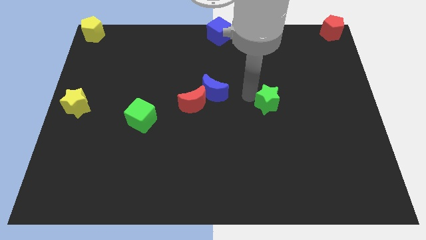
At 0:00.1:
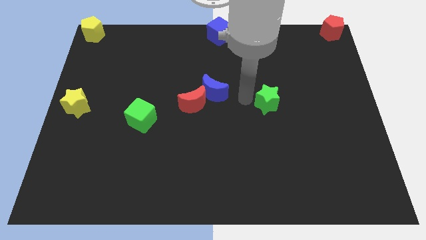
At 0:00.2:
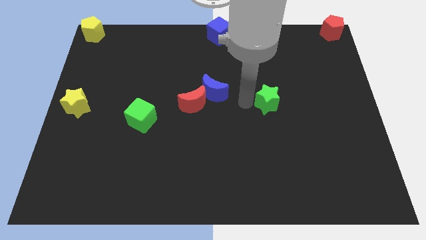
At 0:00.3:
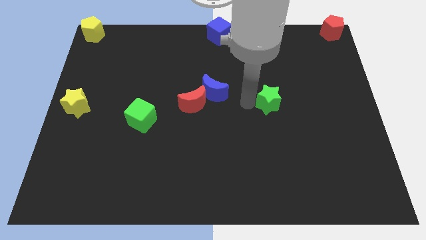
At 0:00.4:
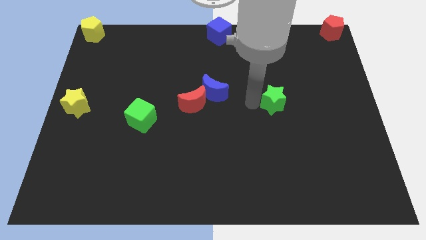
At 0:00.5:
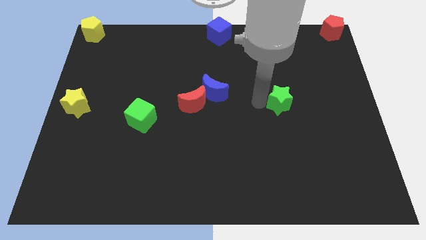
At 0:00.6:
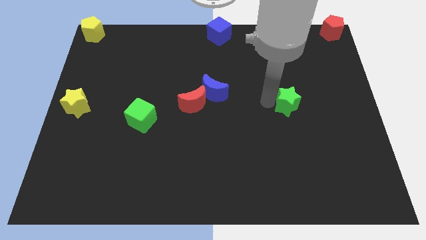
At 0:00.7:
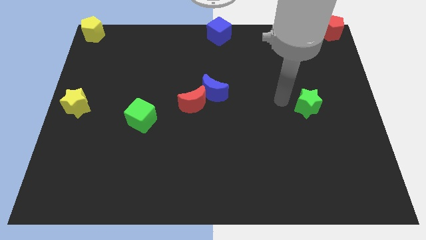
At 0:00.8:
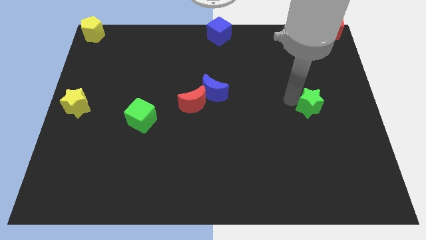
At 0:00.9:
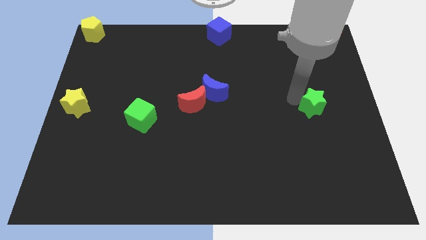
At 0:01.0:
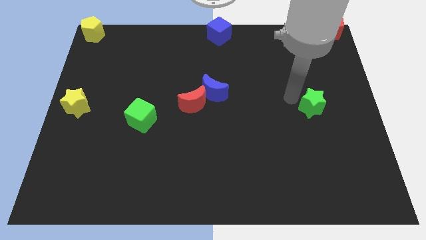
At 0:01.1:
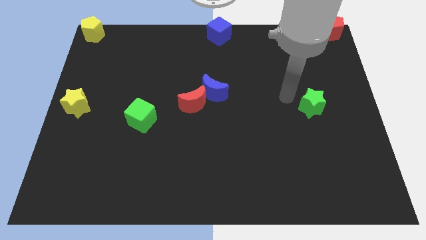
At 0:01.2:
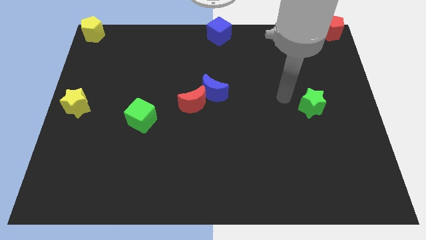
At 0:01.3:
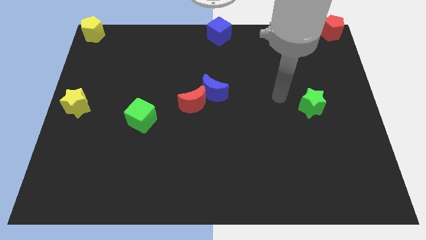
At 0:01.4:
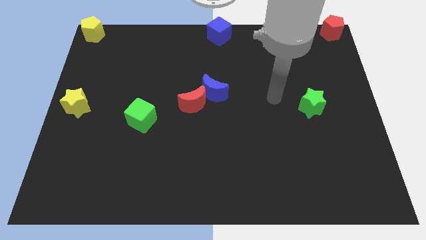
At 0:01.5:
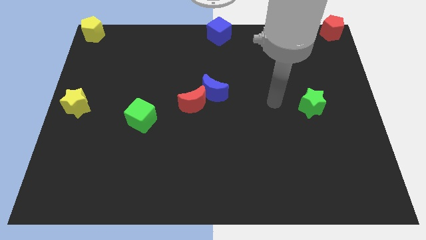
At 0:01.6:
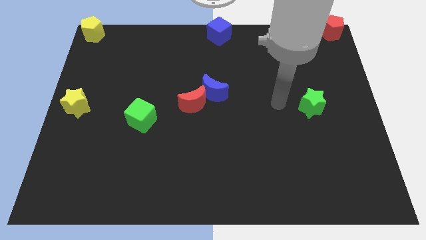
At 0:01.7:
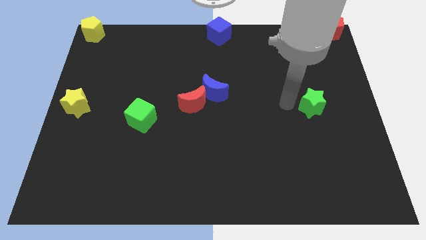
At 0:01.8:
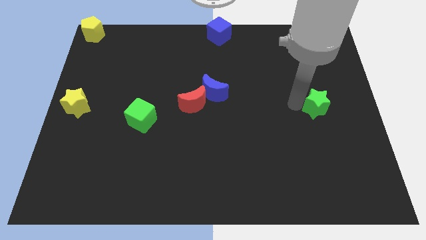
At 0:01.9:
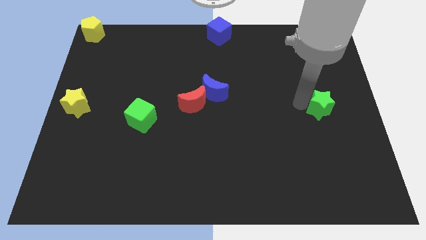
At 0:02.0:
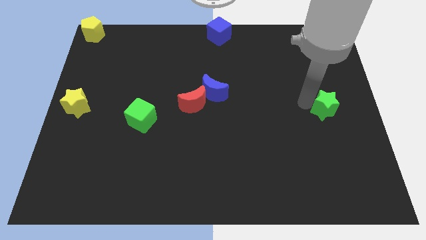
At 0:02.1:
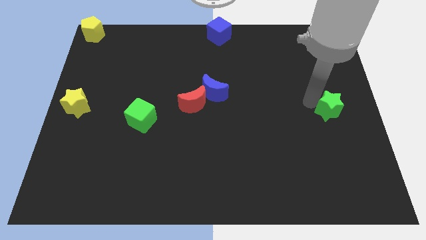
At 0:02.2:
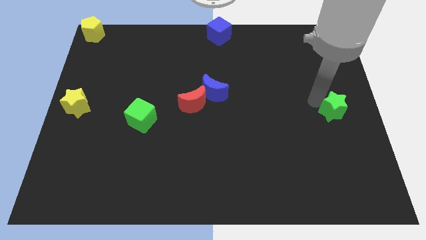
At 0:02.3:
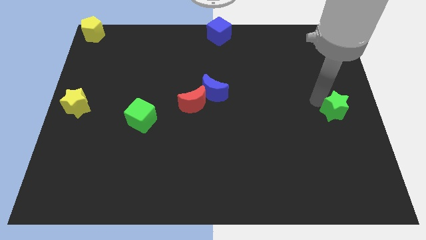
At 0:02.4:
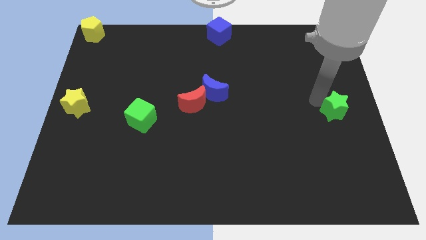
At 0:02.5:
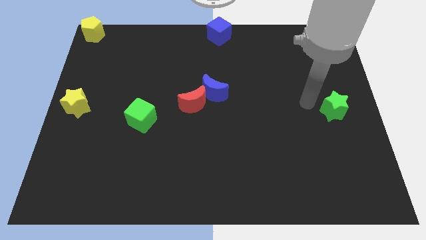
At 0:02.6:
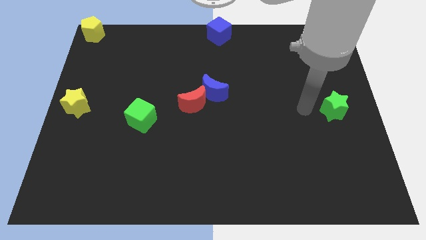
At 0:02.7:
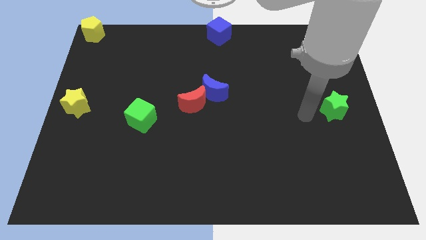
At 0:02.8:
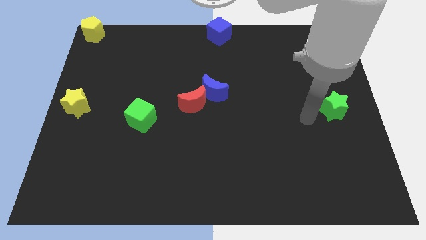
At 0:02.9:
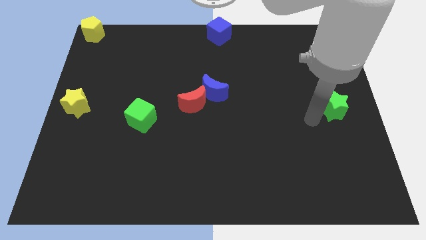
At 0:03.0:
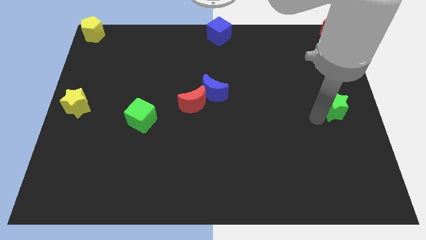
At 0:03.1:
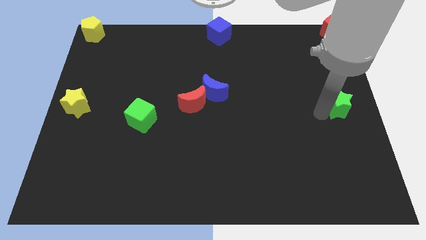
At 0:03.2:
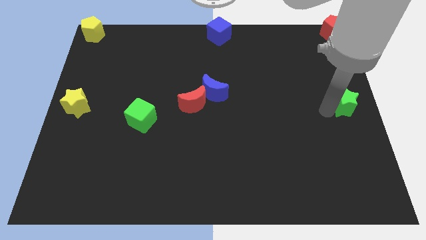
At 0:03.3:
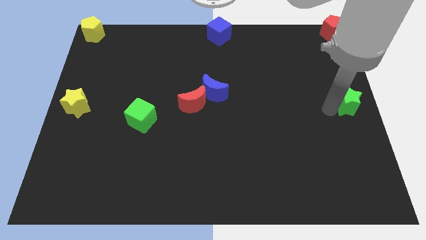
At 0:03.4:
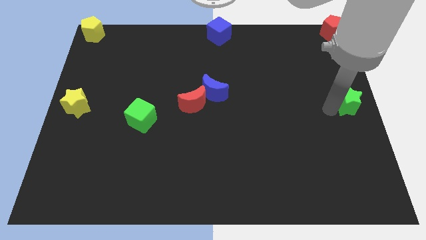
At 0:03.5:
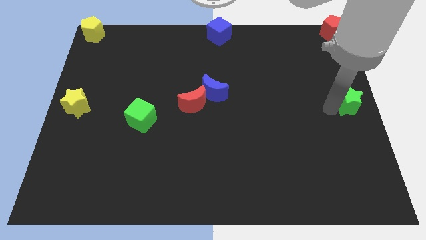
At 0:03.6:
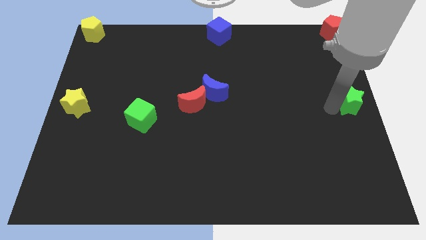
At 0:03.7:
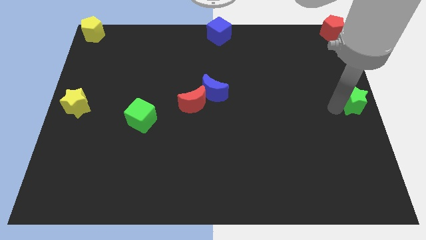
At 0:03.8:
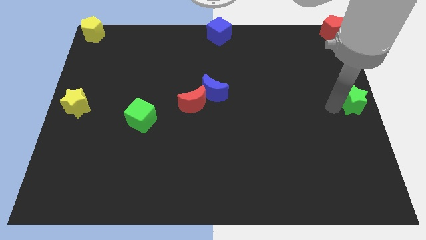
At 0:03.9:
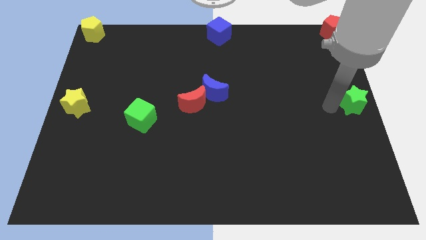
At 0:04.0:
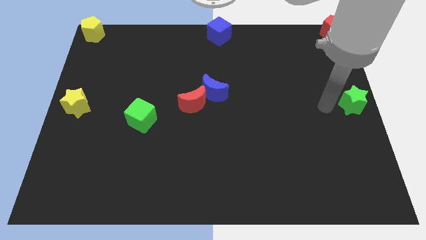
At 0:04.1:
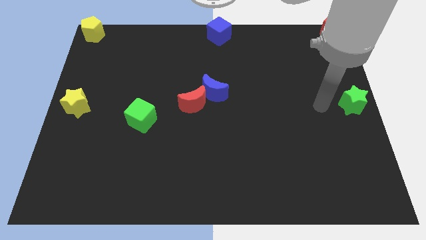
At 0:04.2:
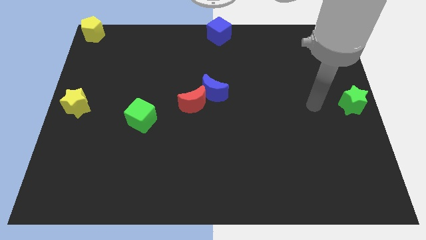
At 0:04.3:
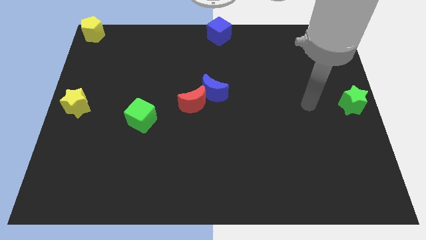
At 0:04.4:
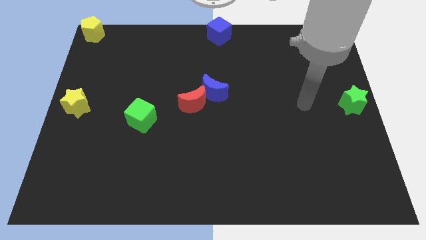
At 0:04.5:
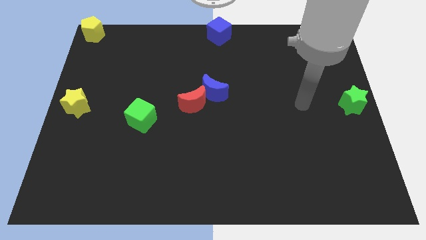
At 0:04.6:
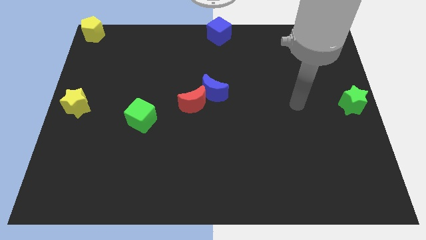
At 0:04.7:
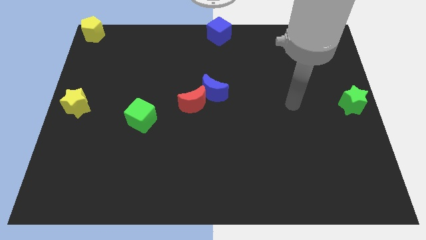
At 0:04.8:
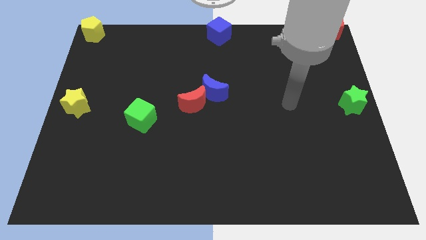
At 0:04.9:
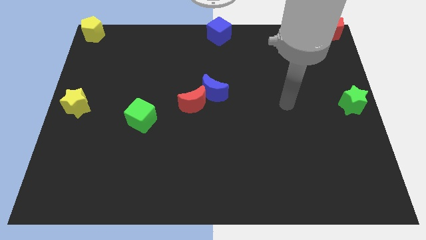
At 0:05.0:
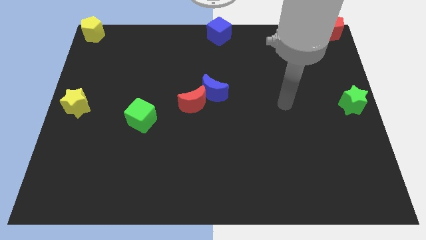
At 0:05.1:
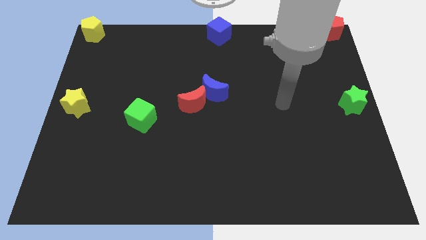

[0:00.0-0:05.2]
push the green star to the center right side of the board

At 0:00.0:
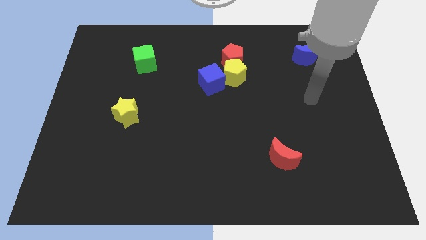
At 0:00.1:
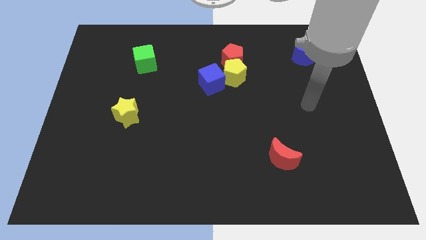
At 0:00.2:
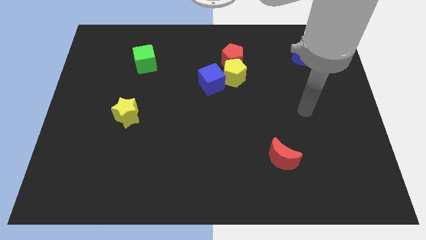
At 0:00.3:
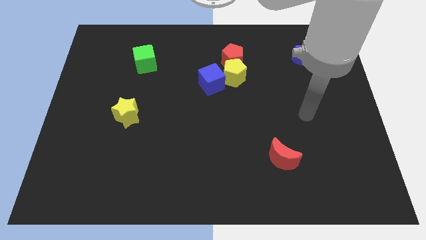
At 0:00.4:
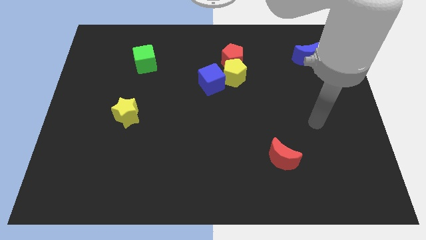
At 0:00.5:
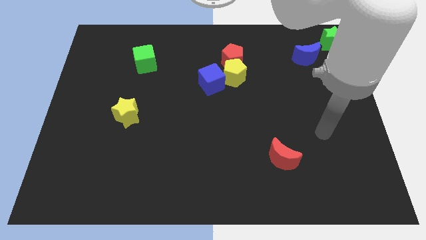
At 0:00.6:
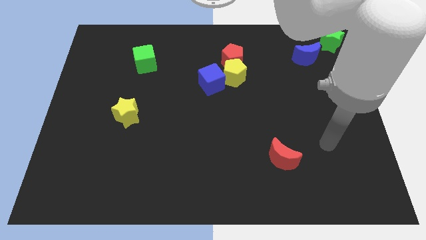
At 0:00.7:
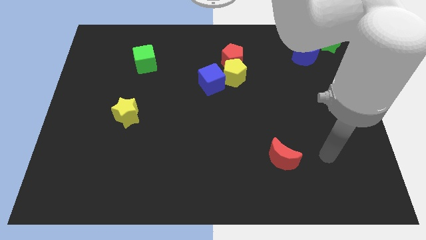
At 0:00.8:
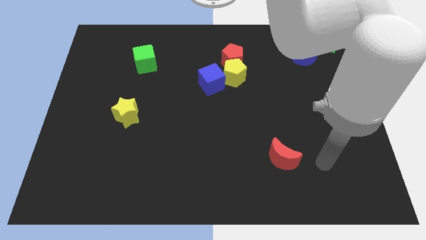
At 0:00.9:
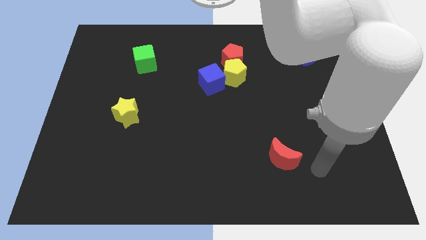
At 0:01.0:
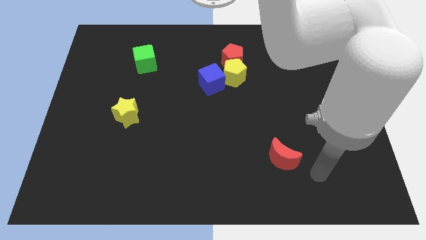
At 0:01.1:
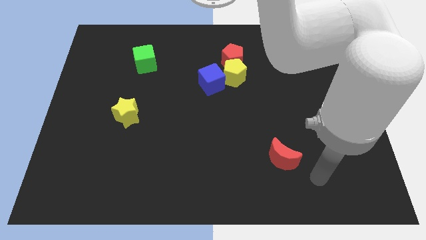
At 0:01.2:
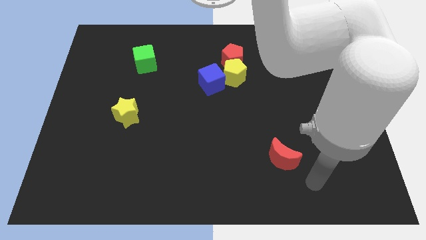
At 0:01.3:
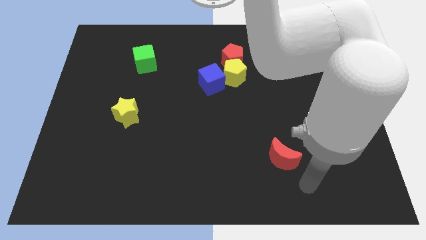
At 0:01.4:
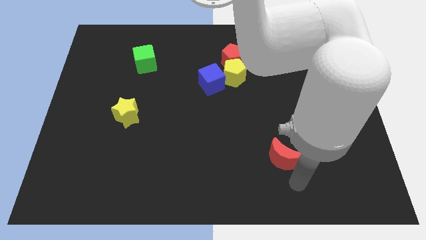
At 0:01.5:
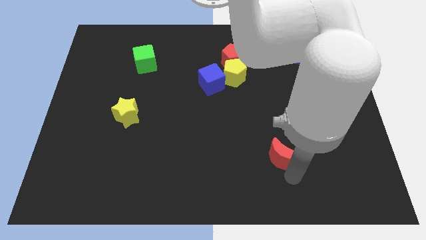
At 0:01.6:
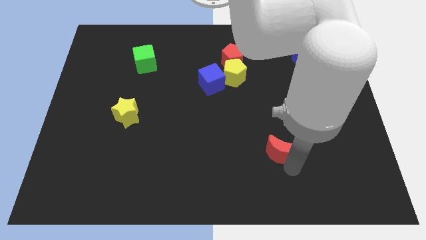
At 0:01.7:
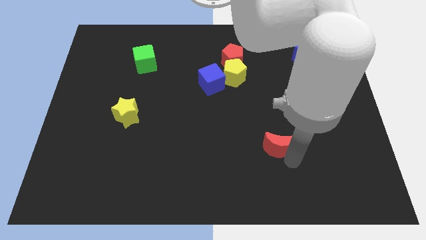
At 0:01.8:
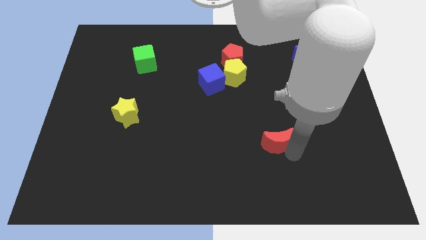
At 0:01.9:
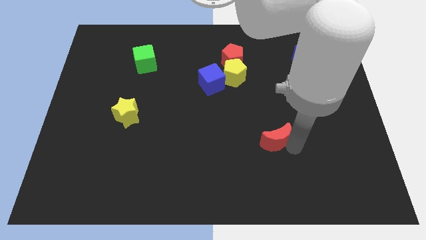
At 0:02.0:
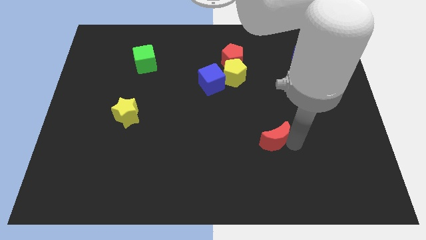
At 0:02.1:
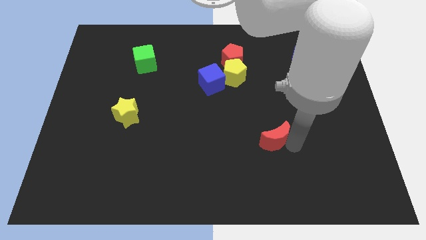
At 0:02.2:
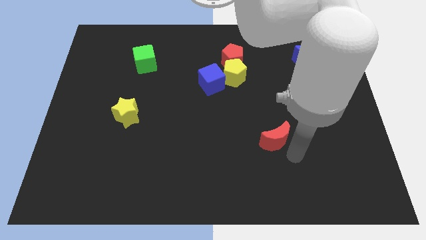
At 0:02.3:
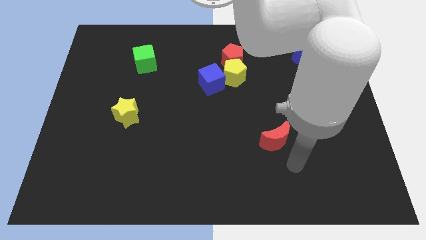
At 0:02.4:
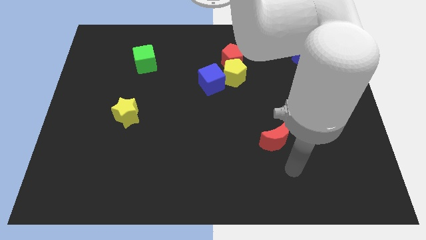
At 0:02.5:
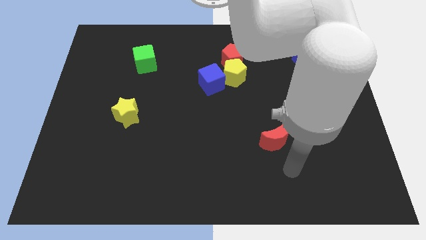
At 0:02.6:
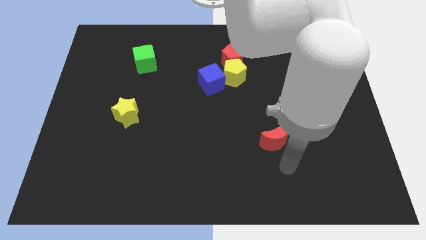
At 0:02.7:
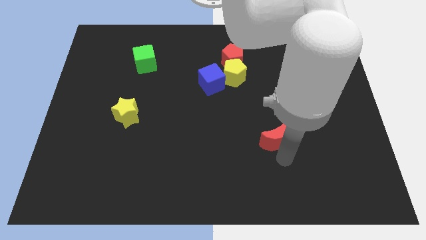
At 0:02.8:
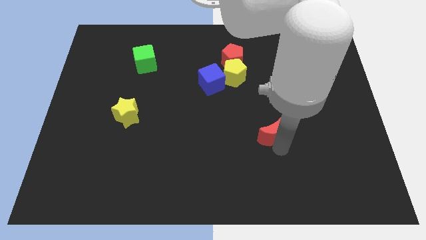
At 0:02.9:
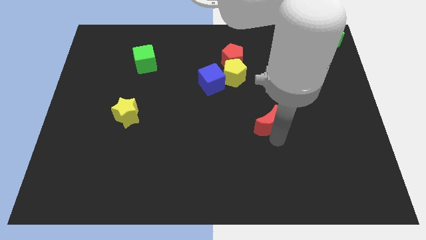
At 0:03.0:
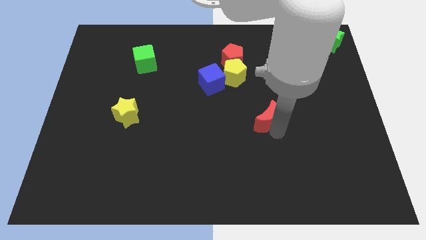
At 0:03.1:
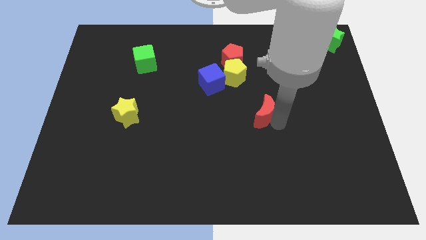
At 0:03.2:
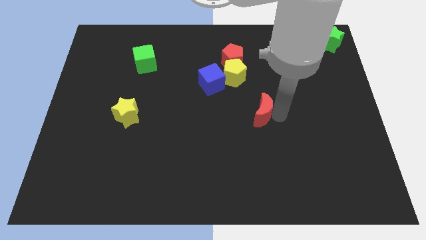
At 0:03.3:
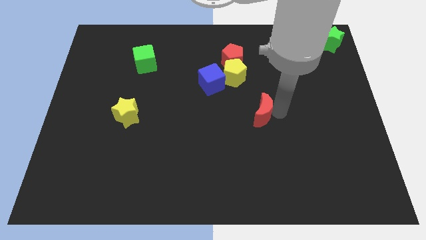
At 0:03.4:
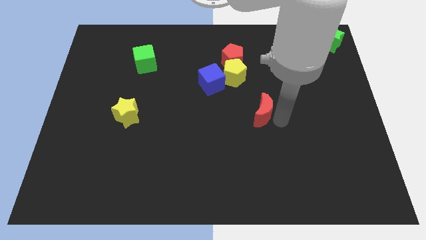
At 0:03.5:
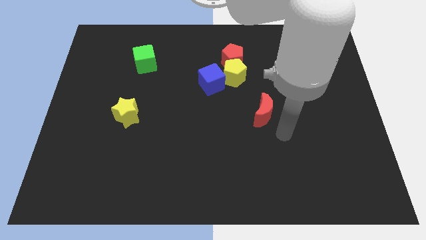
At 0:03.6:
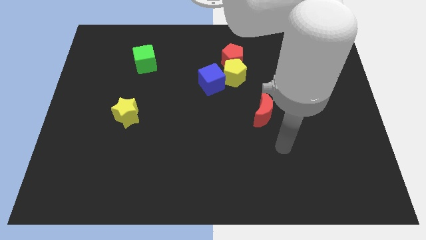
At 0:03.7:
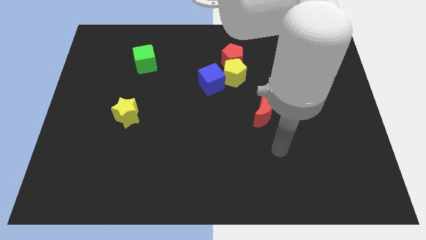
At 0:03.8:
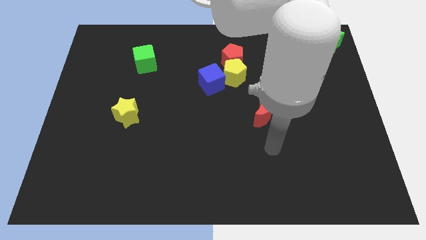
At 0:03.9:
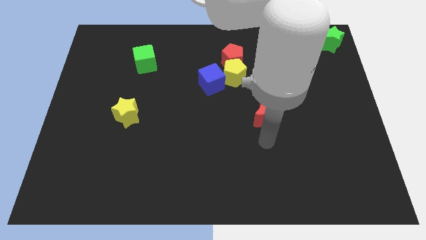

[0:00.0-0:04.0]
push the red crescent towards the center of the board
